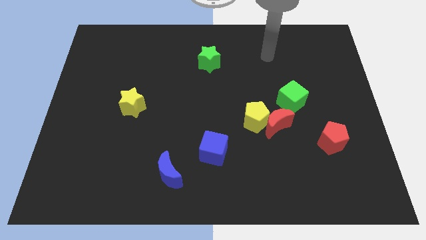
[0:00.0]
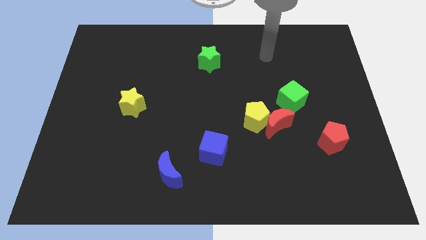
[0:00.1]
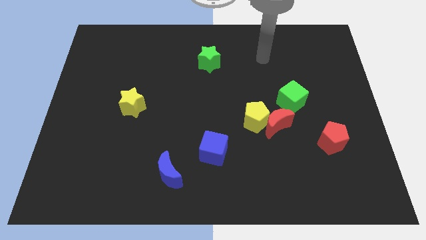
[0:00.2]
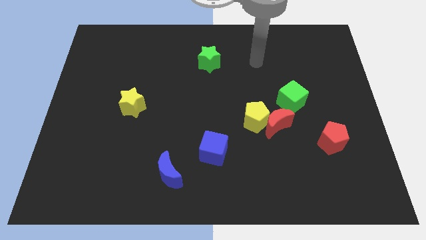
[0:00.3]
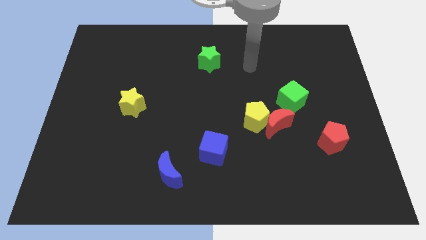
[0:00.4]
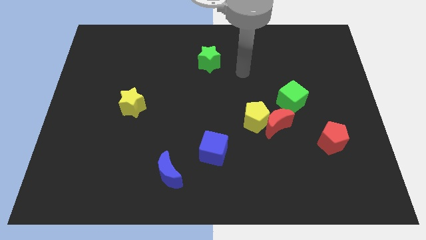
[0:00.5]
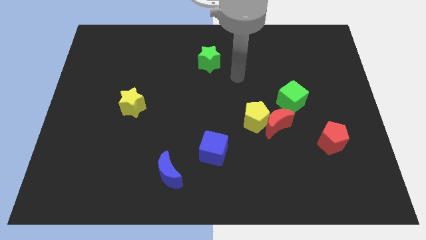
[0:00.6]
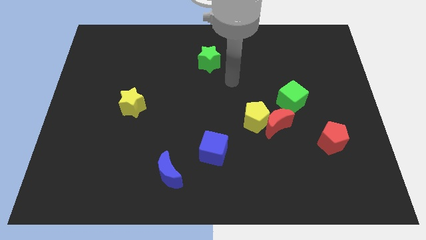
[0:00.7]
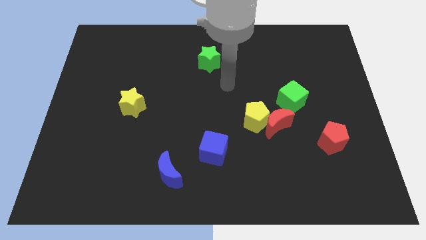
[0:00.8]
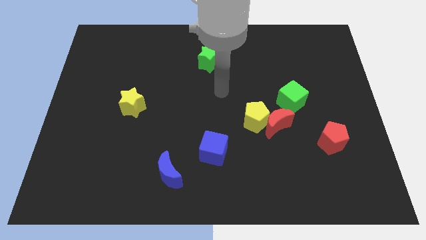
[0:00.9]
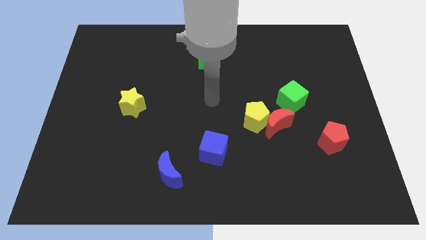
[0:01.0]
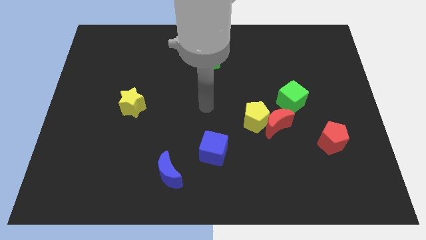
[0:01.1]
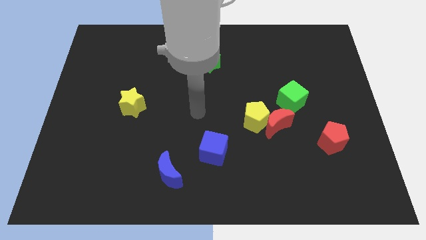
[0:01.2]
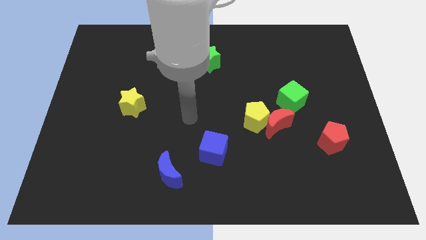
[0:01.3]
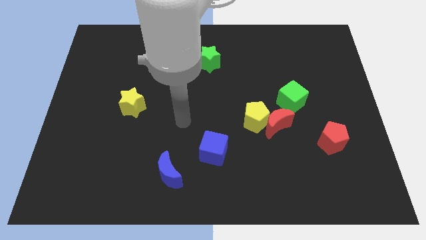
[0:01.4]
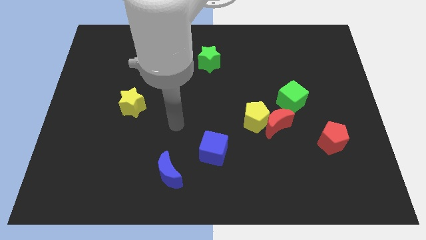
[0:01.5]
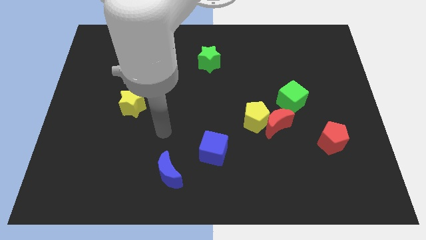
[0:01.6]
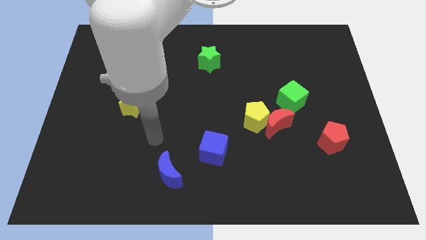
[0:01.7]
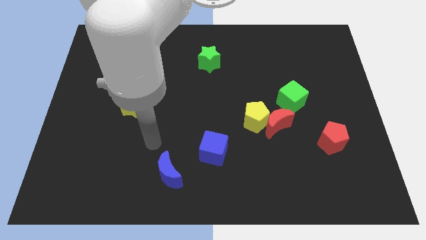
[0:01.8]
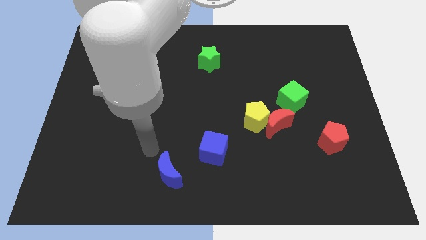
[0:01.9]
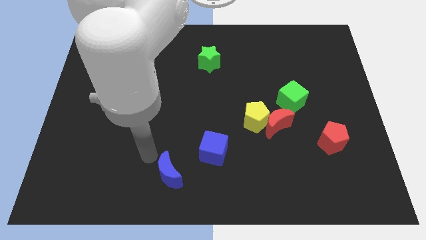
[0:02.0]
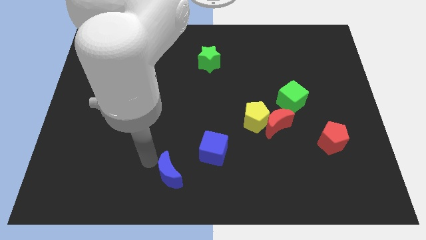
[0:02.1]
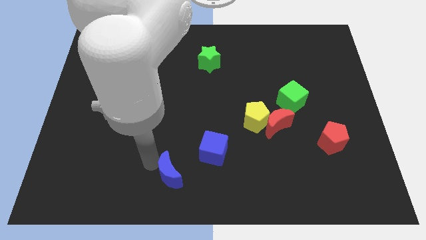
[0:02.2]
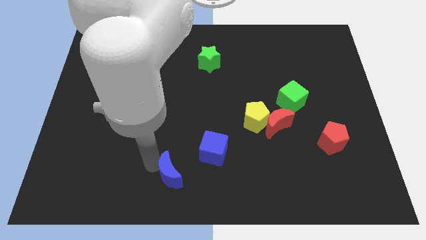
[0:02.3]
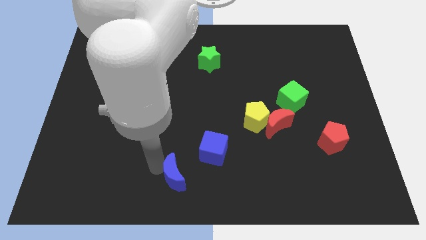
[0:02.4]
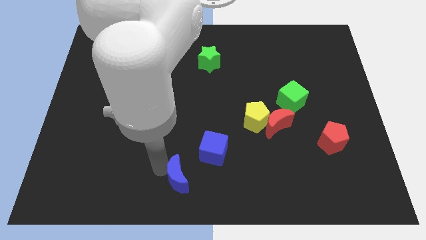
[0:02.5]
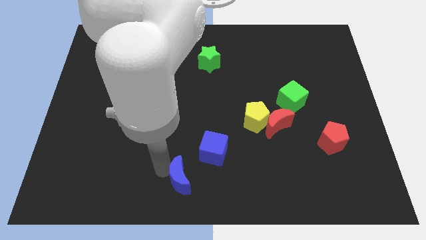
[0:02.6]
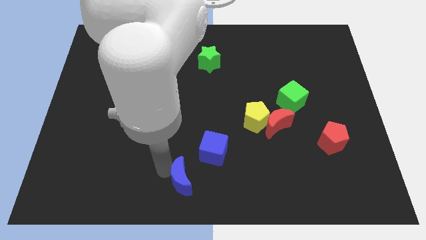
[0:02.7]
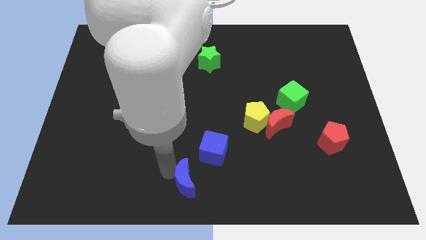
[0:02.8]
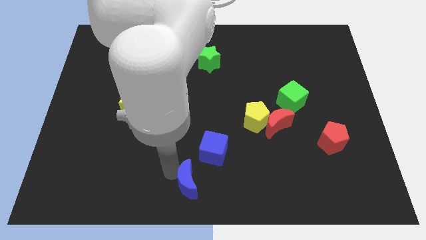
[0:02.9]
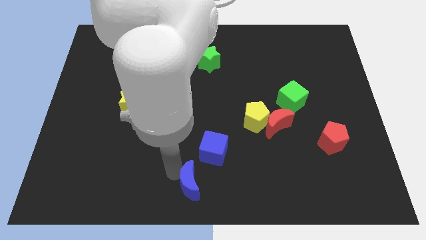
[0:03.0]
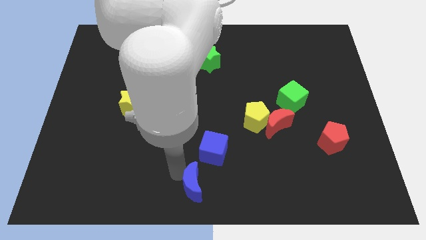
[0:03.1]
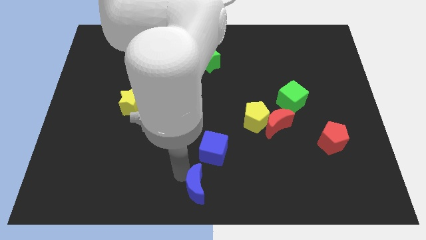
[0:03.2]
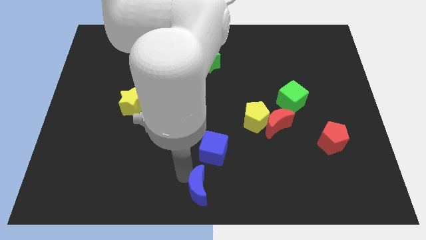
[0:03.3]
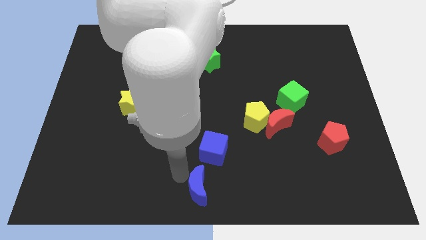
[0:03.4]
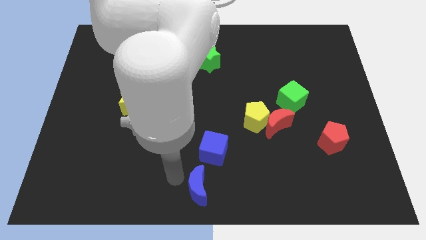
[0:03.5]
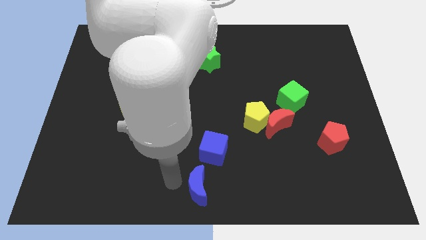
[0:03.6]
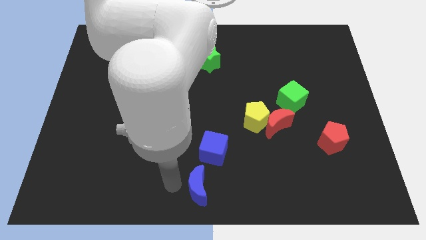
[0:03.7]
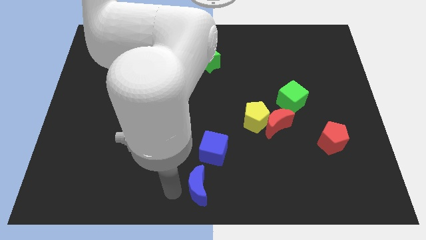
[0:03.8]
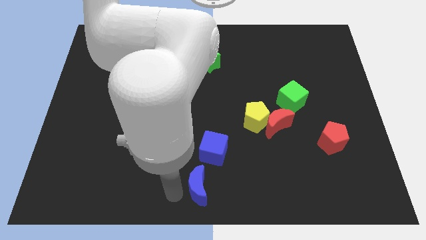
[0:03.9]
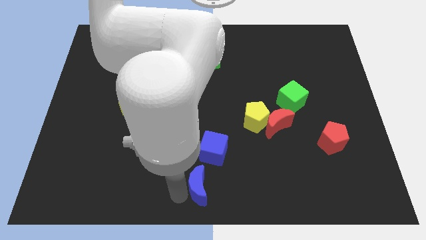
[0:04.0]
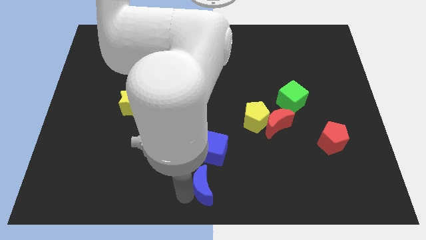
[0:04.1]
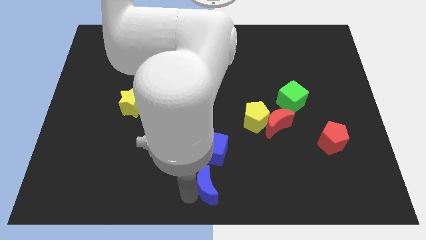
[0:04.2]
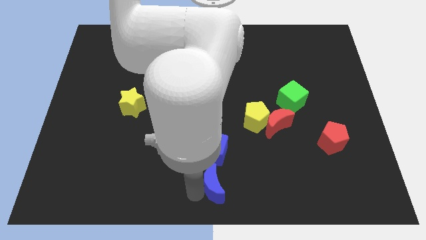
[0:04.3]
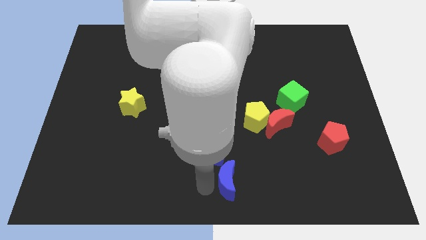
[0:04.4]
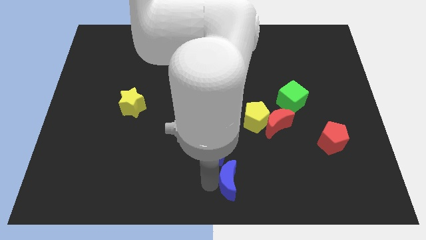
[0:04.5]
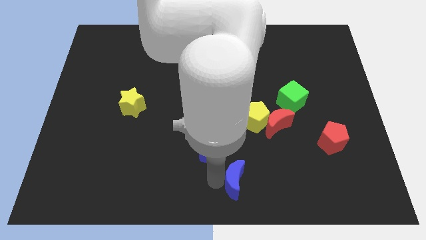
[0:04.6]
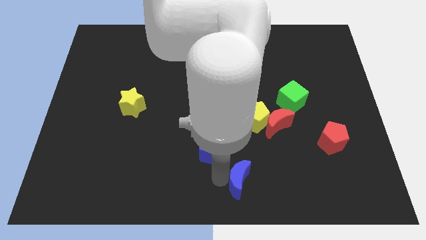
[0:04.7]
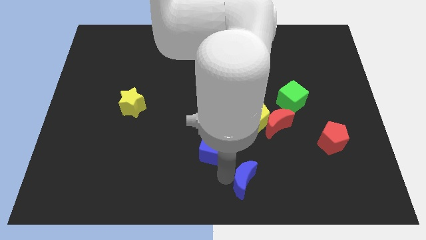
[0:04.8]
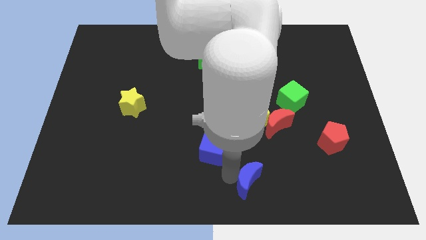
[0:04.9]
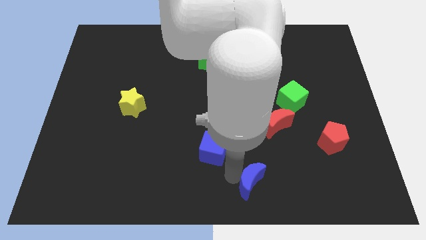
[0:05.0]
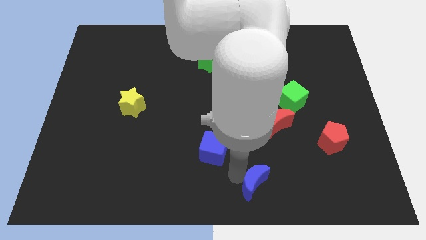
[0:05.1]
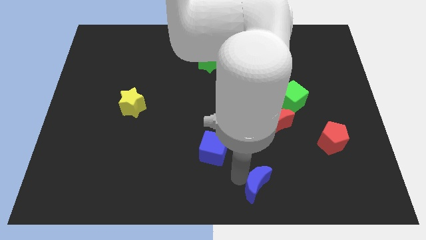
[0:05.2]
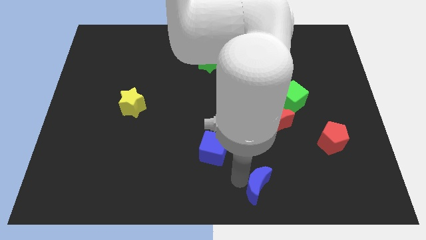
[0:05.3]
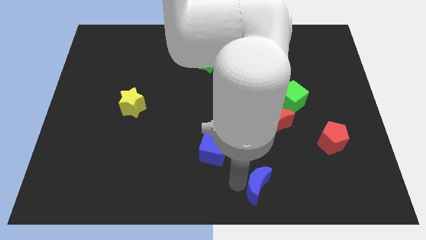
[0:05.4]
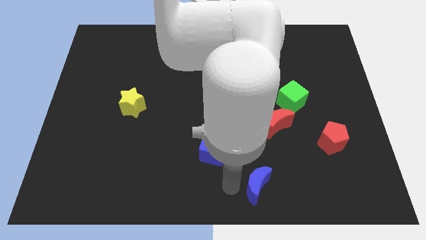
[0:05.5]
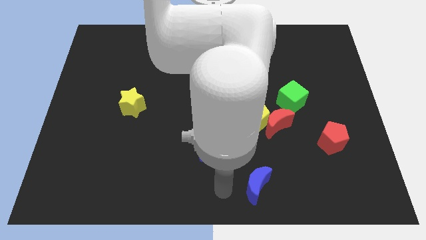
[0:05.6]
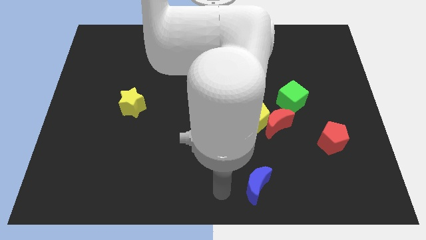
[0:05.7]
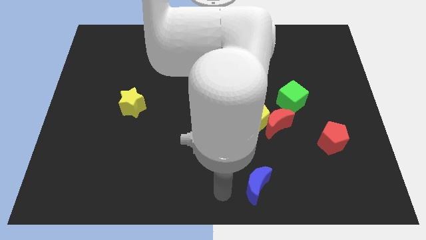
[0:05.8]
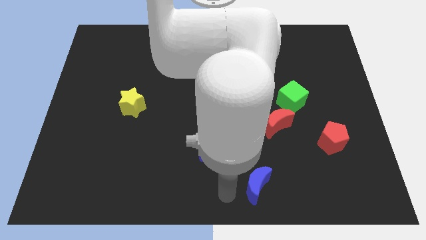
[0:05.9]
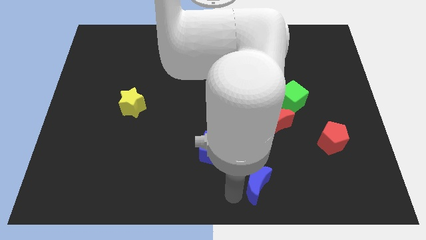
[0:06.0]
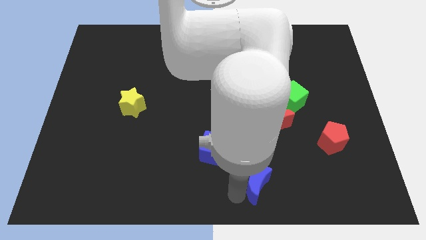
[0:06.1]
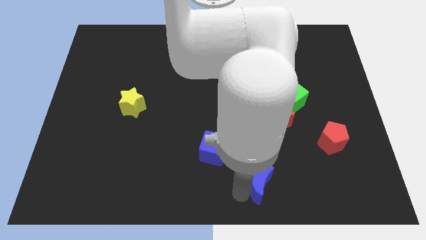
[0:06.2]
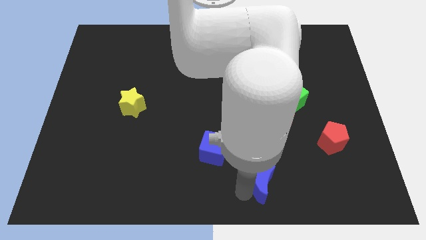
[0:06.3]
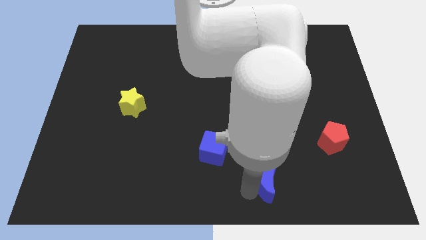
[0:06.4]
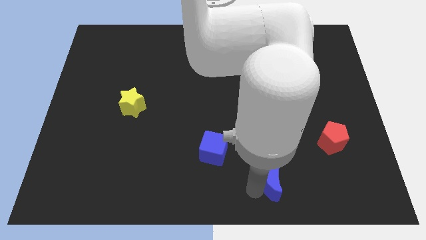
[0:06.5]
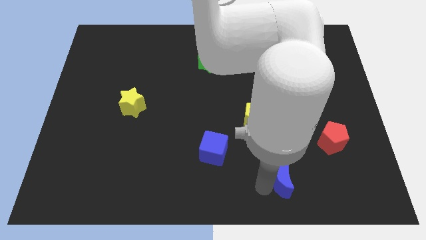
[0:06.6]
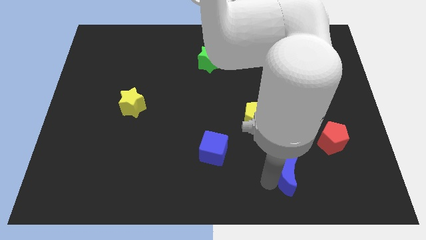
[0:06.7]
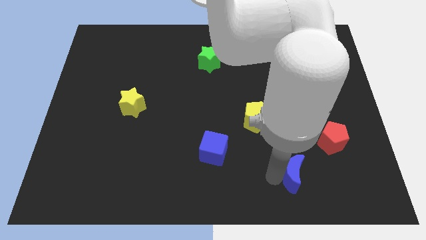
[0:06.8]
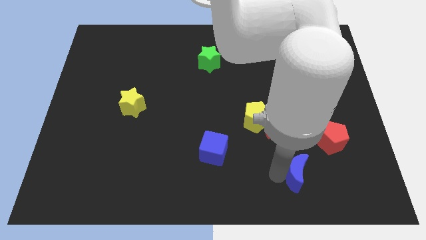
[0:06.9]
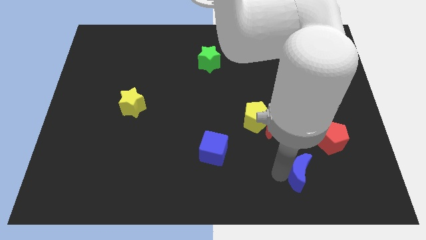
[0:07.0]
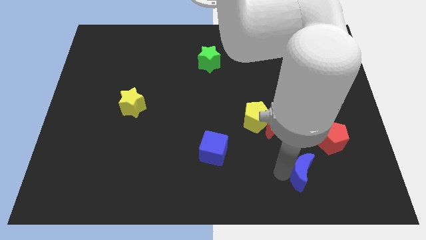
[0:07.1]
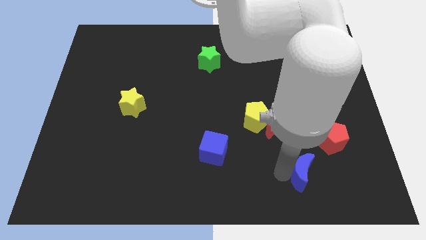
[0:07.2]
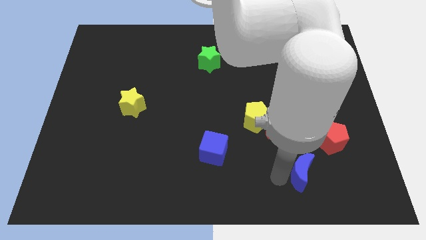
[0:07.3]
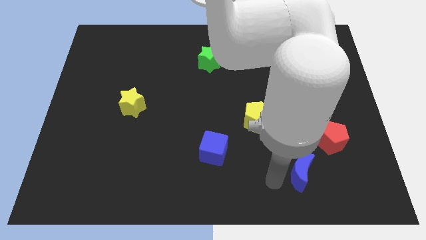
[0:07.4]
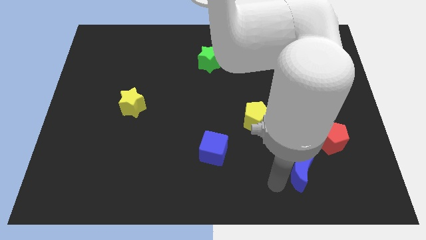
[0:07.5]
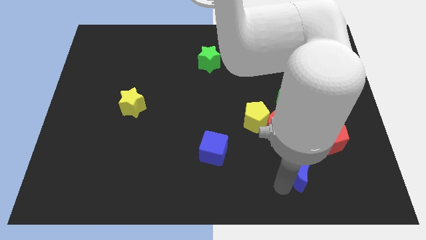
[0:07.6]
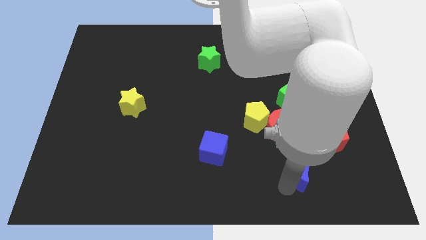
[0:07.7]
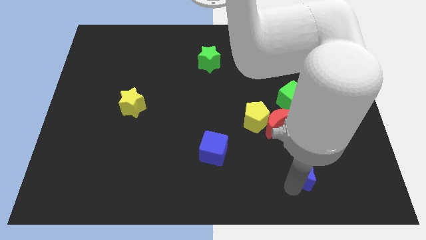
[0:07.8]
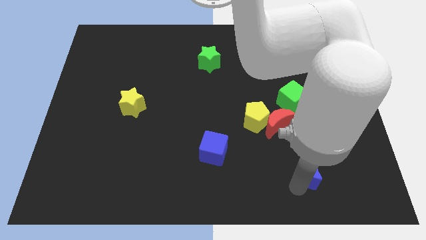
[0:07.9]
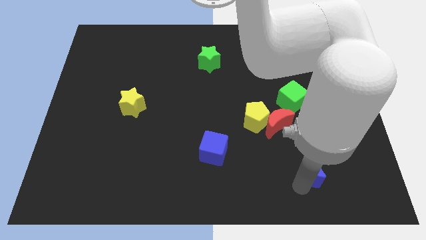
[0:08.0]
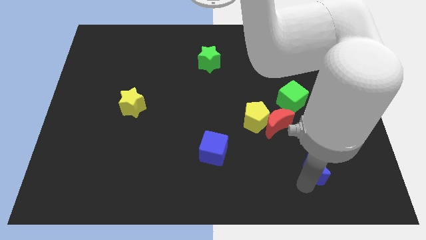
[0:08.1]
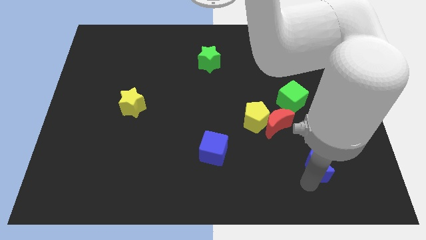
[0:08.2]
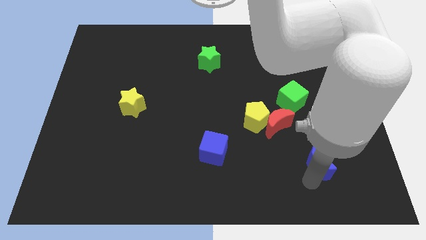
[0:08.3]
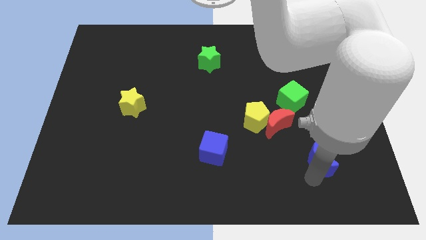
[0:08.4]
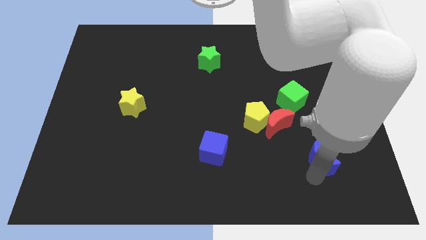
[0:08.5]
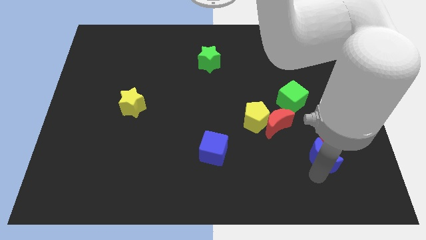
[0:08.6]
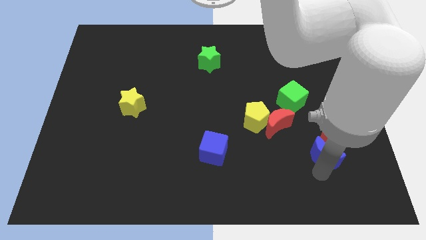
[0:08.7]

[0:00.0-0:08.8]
put the blue moon towards the red pentagon
